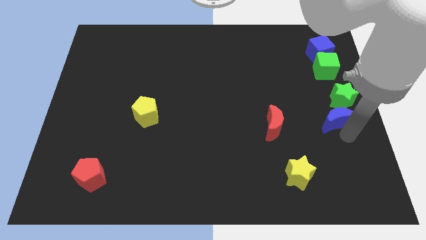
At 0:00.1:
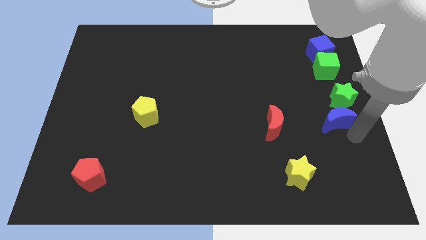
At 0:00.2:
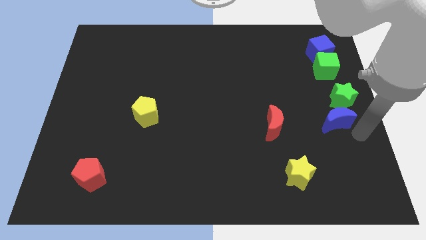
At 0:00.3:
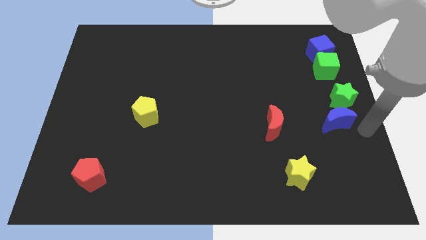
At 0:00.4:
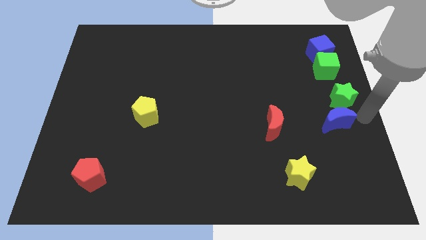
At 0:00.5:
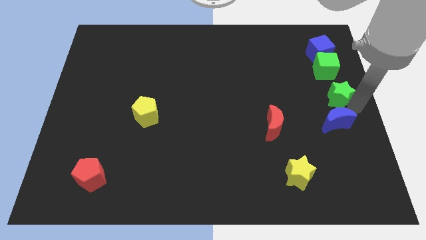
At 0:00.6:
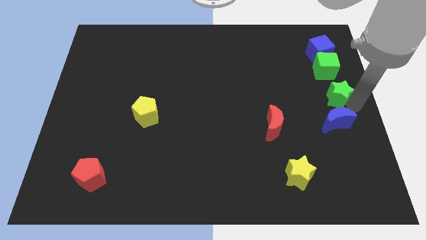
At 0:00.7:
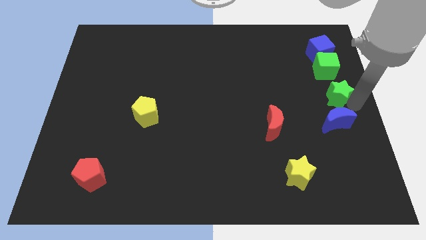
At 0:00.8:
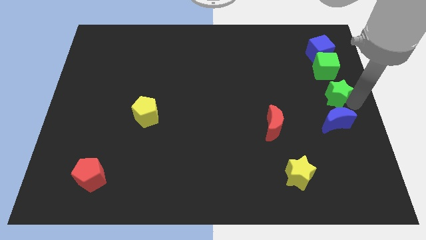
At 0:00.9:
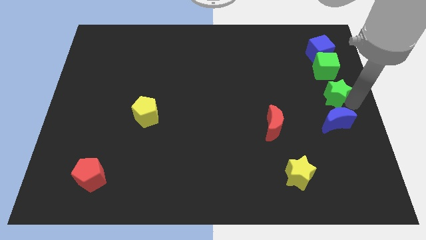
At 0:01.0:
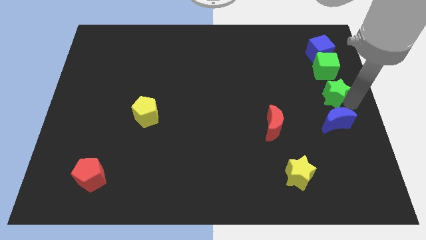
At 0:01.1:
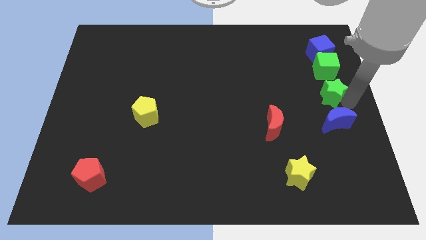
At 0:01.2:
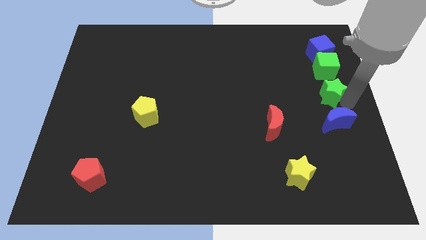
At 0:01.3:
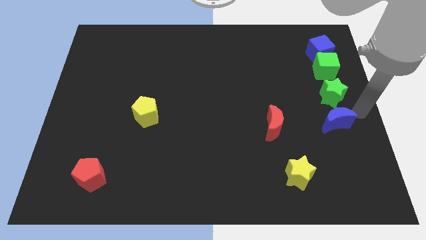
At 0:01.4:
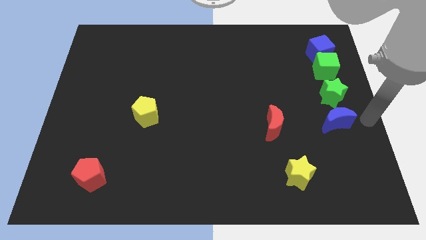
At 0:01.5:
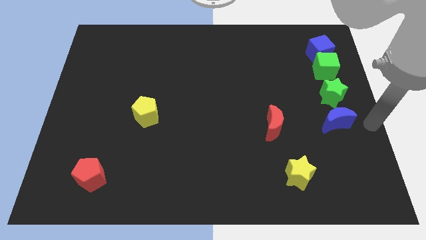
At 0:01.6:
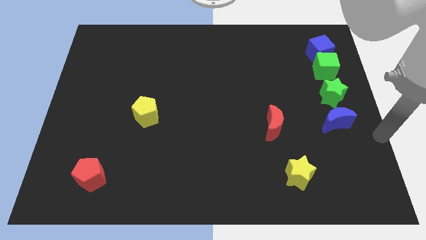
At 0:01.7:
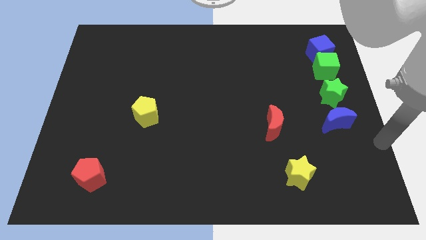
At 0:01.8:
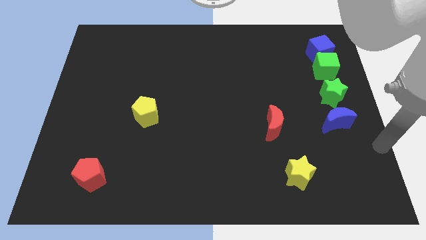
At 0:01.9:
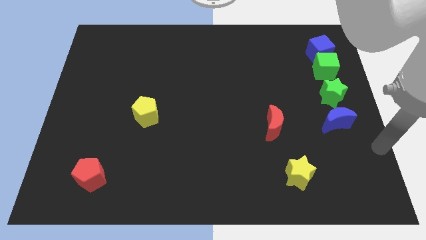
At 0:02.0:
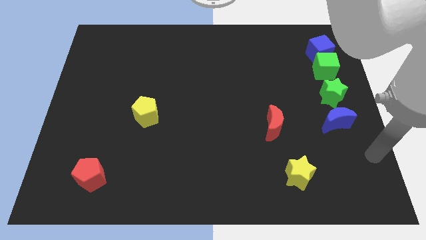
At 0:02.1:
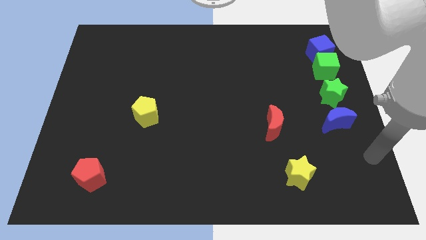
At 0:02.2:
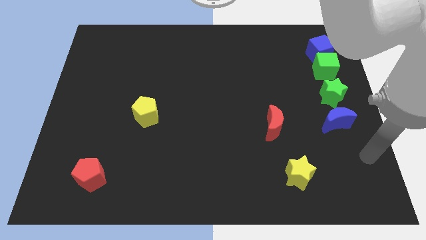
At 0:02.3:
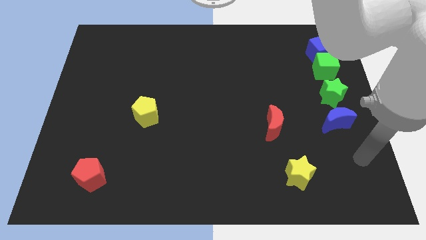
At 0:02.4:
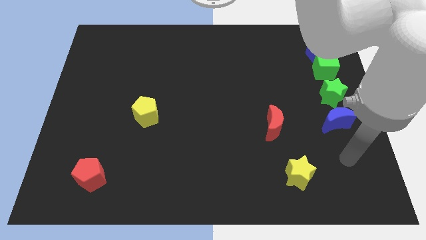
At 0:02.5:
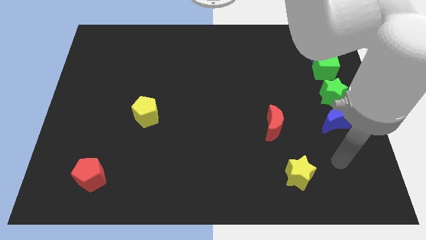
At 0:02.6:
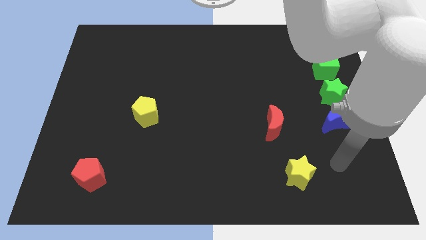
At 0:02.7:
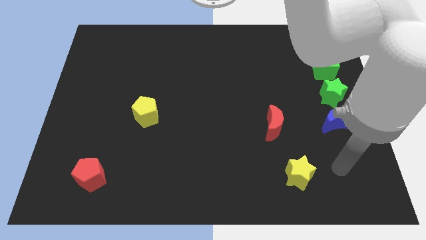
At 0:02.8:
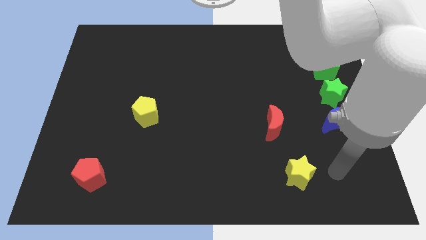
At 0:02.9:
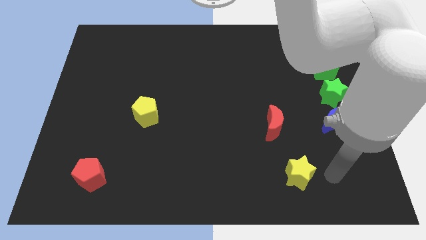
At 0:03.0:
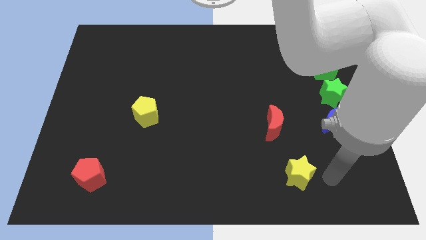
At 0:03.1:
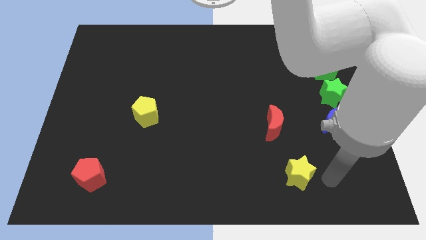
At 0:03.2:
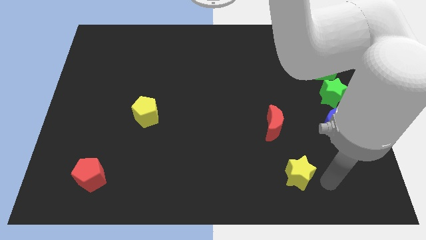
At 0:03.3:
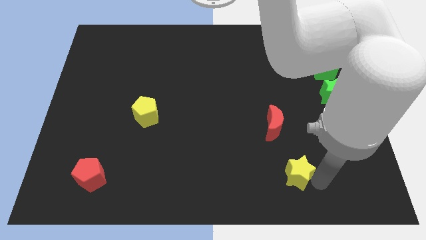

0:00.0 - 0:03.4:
move your arm away from green star

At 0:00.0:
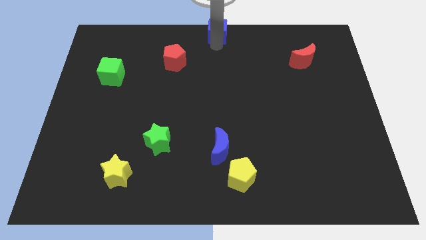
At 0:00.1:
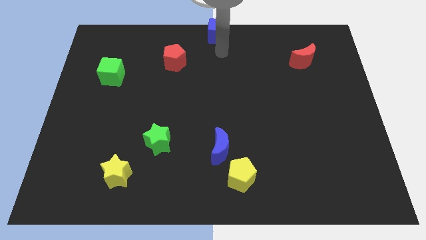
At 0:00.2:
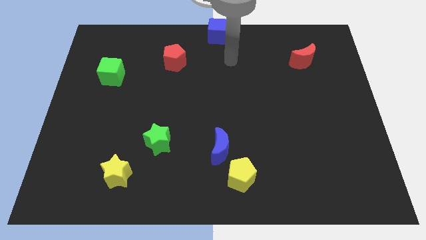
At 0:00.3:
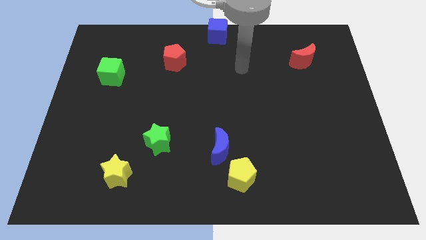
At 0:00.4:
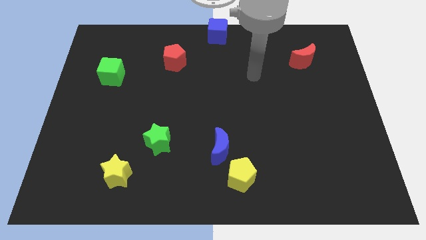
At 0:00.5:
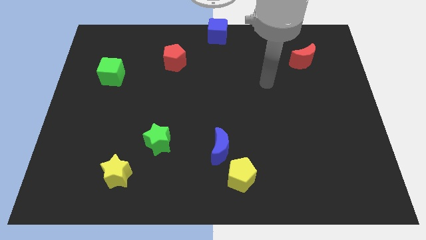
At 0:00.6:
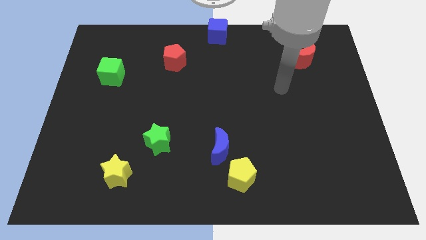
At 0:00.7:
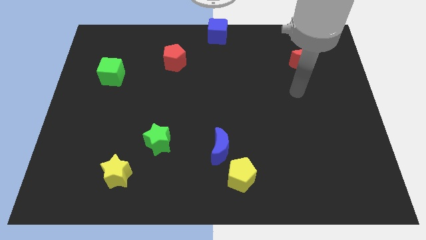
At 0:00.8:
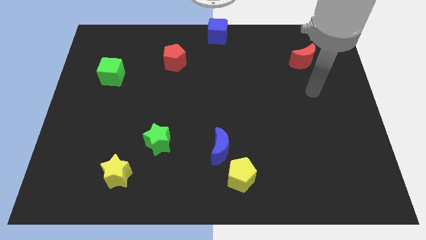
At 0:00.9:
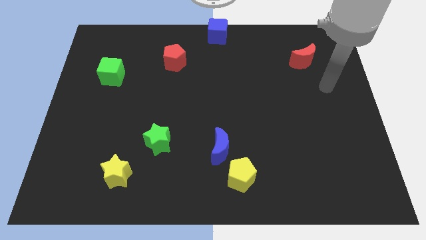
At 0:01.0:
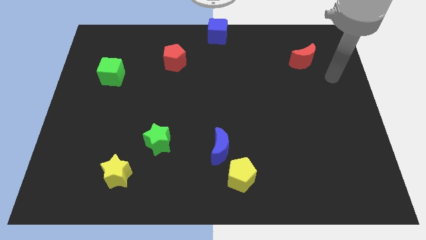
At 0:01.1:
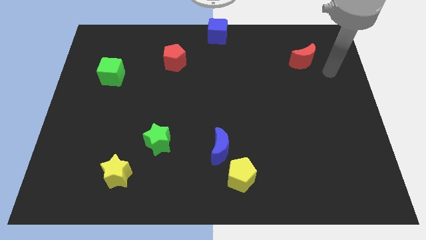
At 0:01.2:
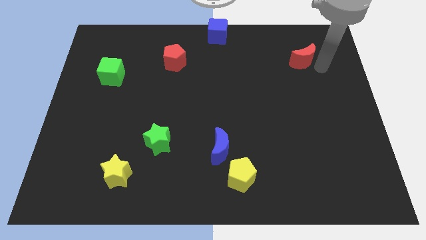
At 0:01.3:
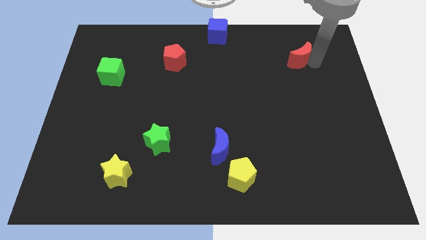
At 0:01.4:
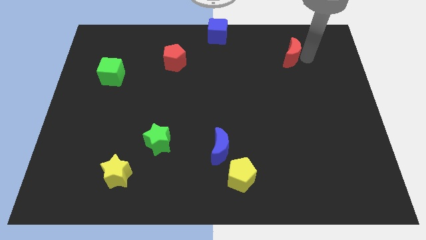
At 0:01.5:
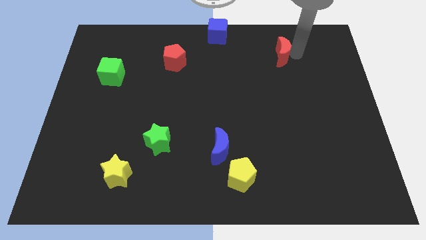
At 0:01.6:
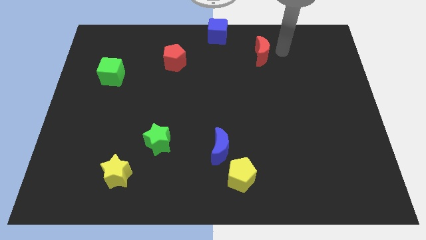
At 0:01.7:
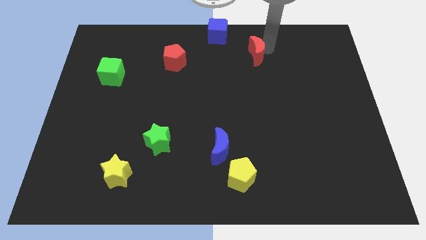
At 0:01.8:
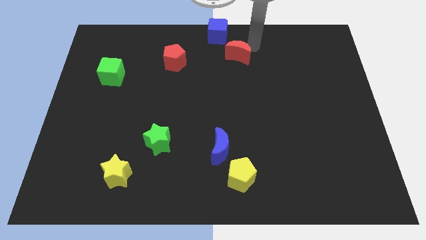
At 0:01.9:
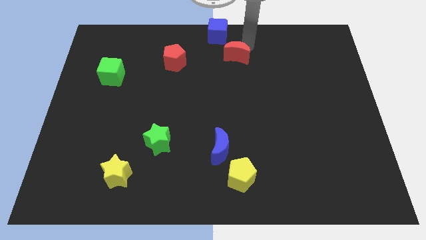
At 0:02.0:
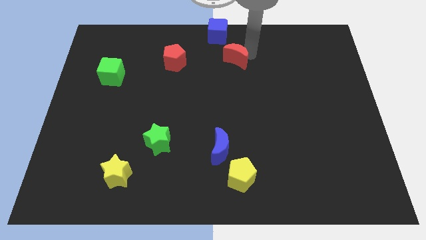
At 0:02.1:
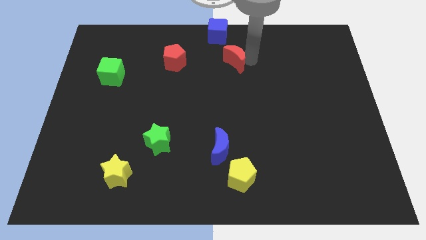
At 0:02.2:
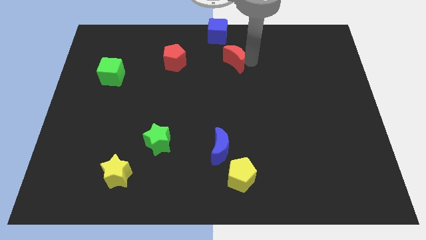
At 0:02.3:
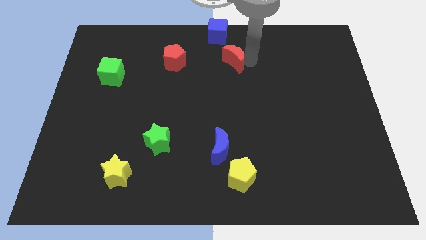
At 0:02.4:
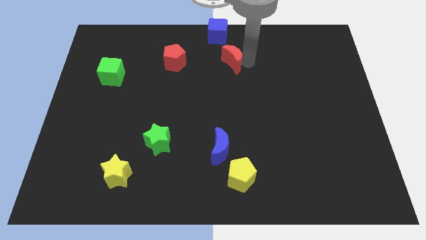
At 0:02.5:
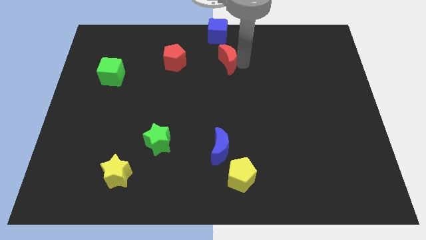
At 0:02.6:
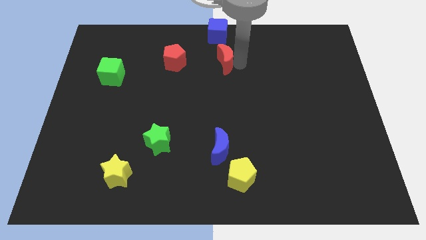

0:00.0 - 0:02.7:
place the red moon parallel to the right of the red pentagon

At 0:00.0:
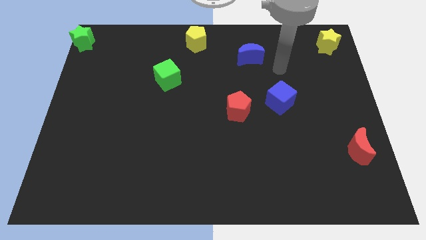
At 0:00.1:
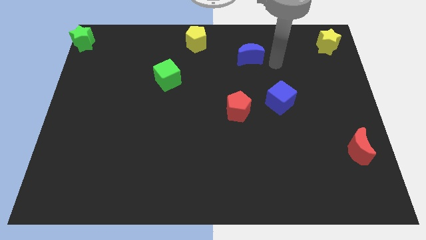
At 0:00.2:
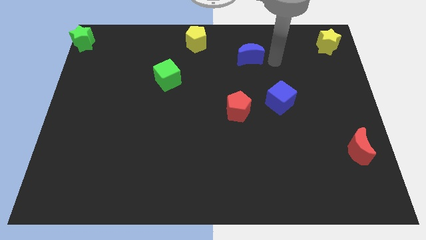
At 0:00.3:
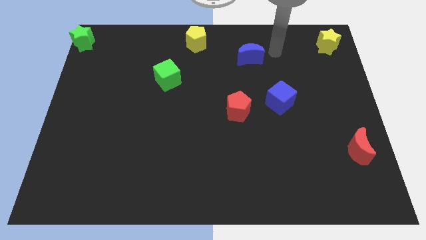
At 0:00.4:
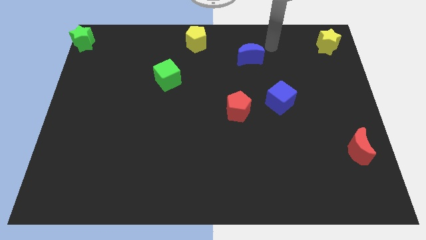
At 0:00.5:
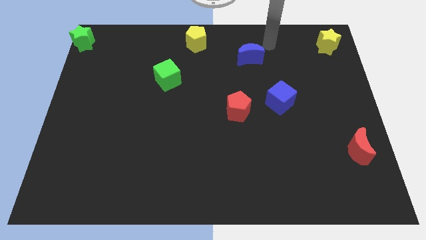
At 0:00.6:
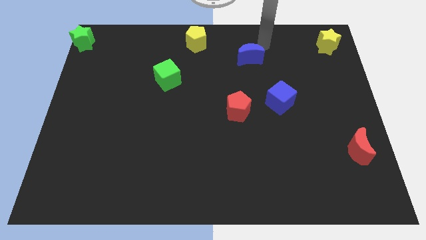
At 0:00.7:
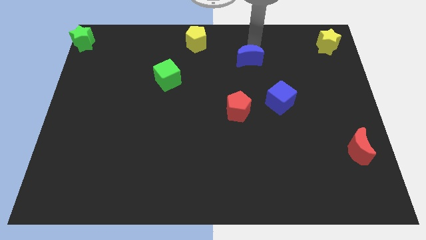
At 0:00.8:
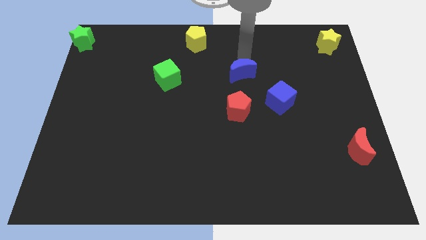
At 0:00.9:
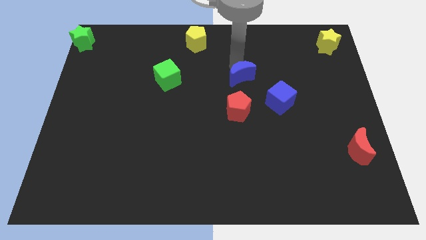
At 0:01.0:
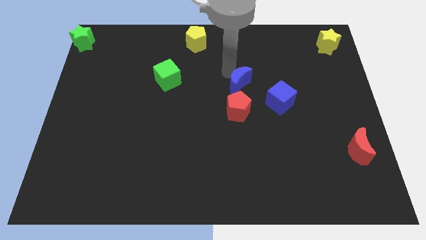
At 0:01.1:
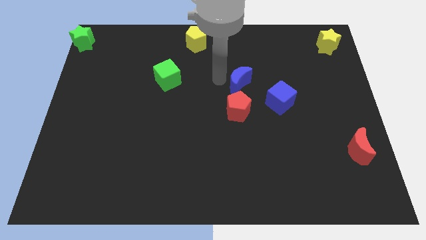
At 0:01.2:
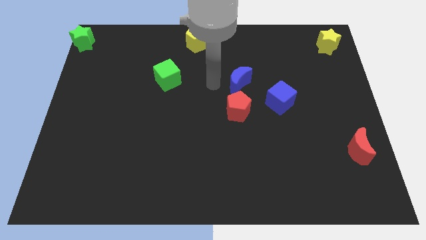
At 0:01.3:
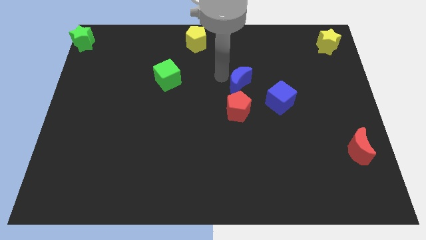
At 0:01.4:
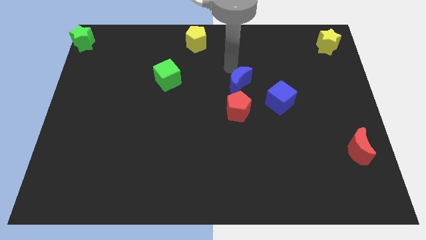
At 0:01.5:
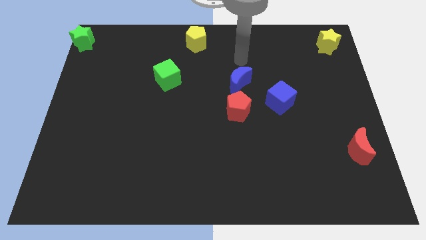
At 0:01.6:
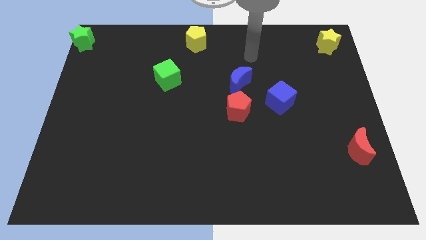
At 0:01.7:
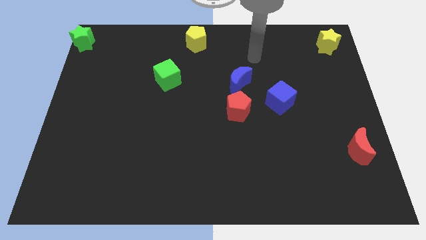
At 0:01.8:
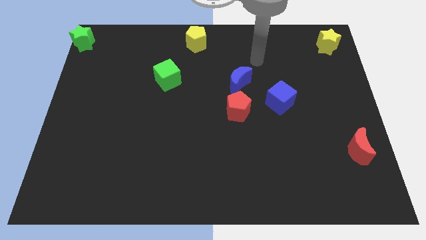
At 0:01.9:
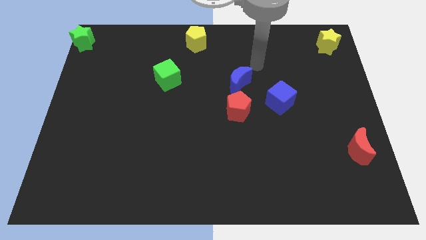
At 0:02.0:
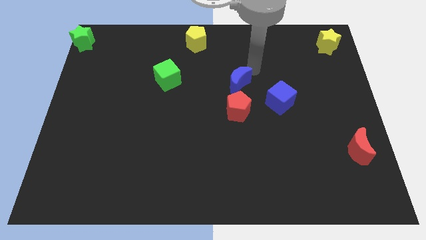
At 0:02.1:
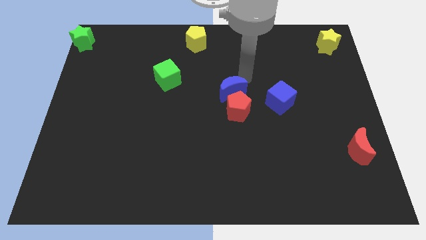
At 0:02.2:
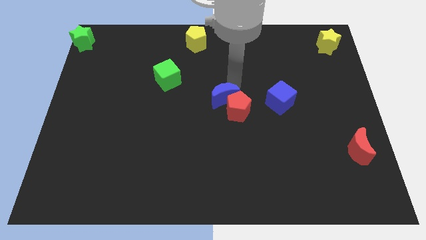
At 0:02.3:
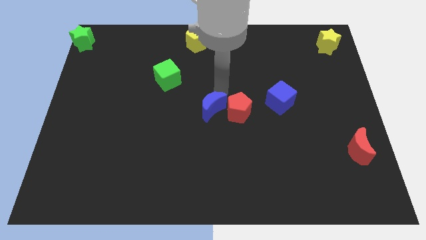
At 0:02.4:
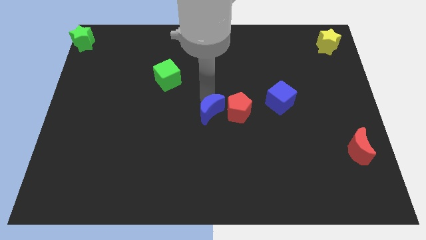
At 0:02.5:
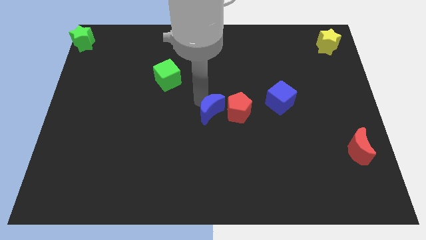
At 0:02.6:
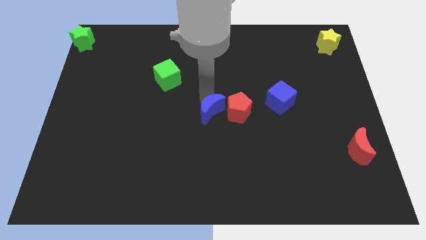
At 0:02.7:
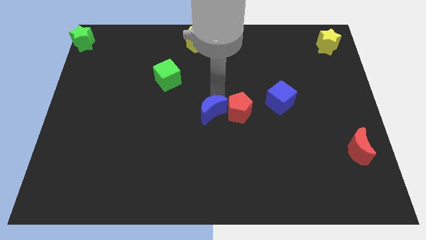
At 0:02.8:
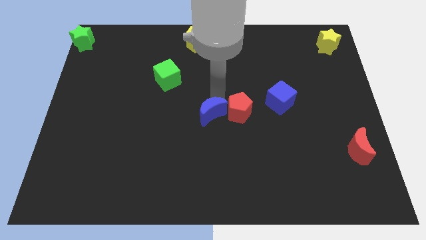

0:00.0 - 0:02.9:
move blue moon left beside the red pentagon
